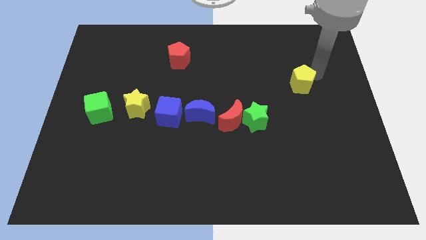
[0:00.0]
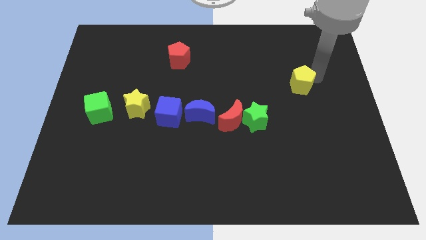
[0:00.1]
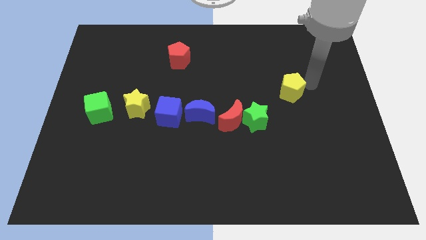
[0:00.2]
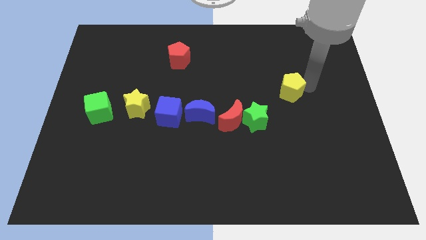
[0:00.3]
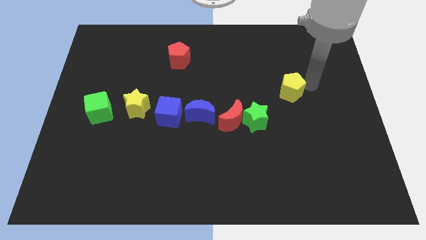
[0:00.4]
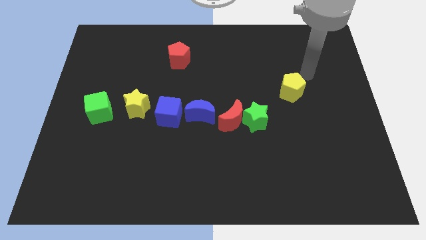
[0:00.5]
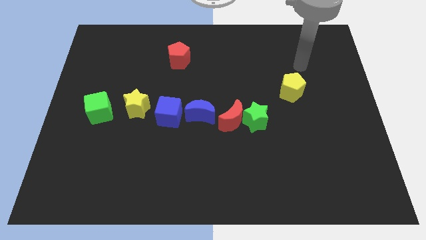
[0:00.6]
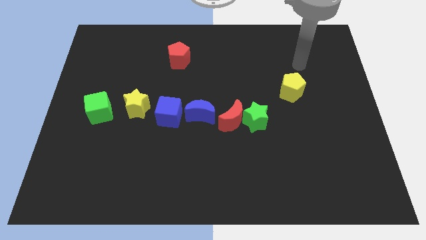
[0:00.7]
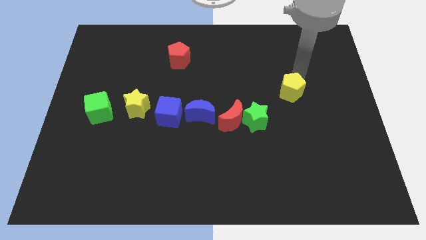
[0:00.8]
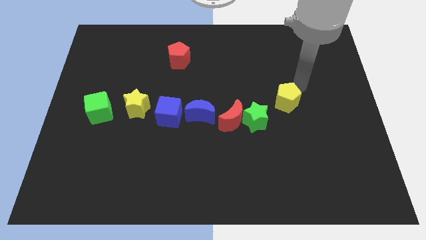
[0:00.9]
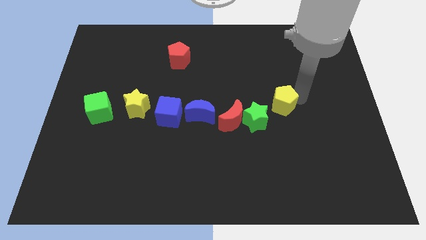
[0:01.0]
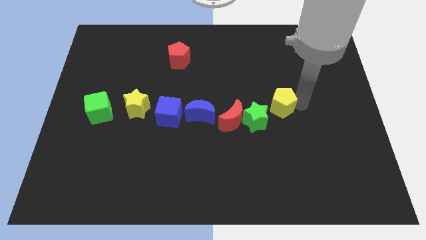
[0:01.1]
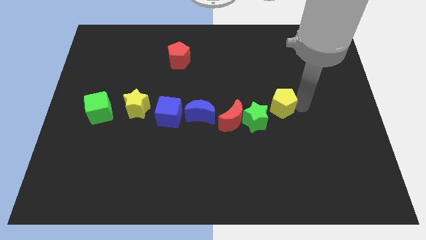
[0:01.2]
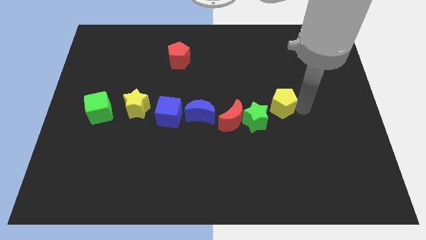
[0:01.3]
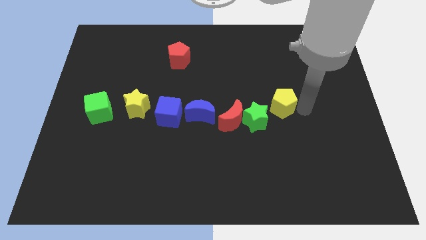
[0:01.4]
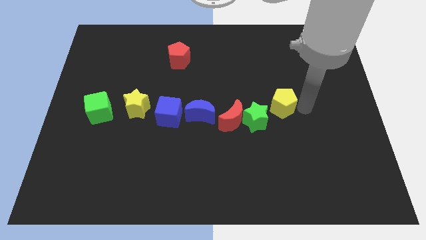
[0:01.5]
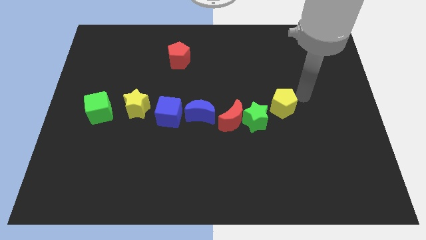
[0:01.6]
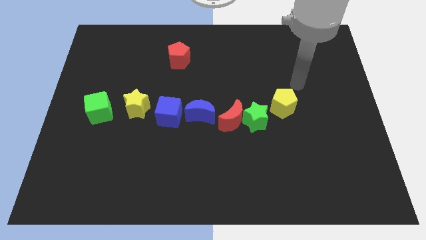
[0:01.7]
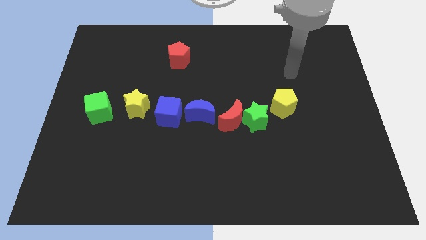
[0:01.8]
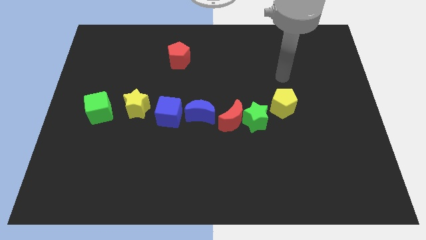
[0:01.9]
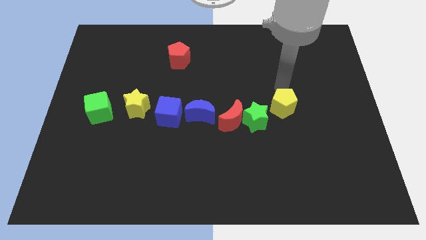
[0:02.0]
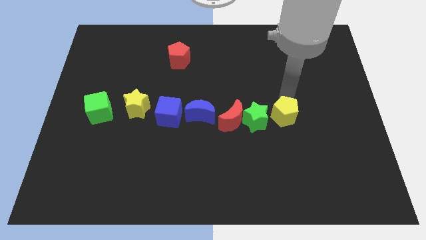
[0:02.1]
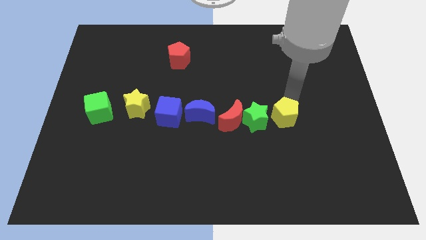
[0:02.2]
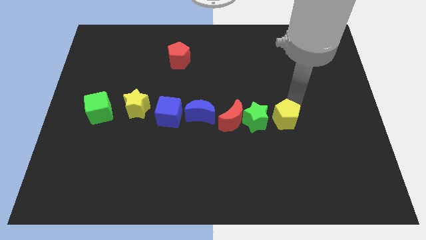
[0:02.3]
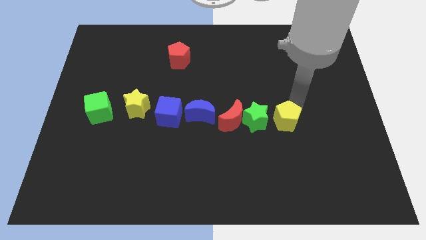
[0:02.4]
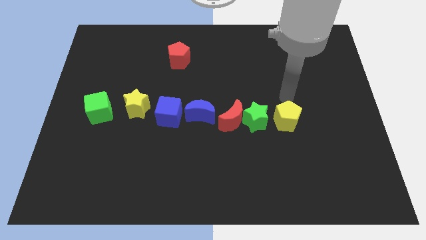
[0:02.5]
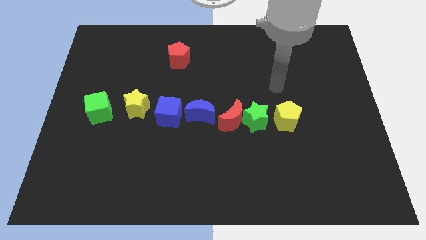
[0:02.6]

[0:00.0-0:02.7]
place yellow pentagon to the right green star

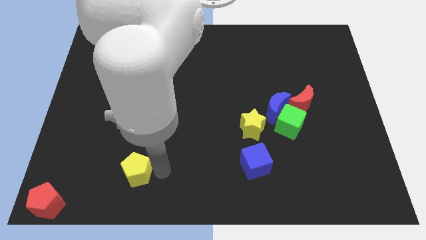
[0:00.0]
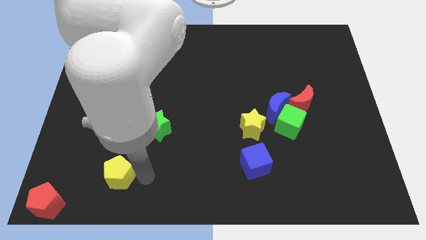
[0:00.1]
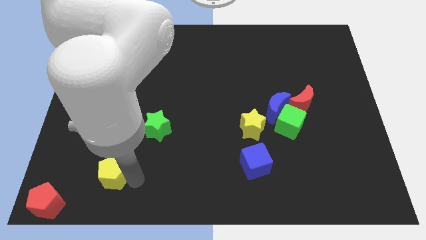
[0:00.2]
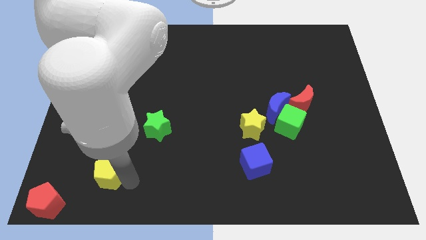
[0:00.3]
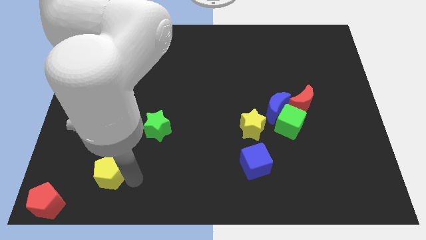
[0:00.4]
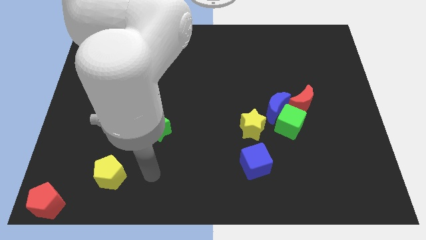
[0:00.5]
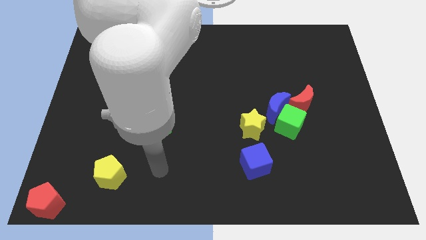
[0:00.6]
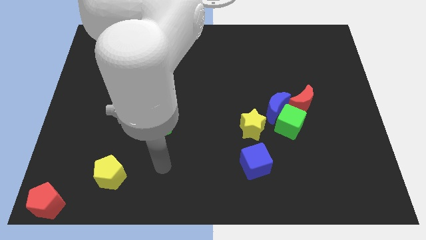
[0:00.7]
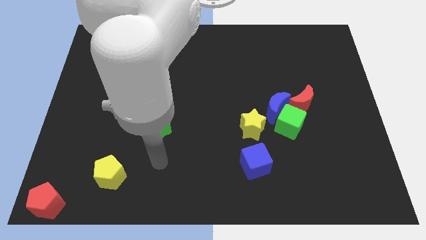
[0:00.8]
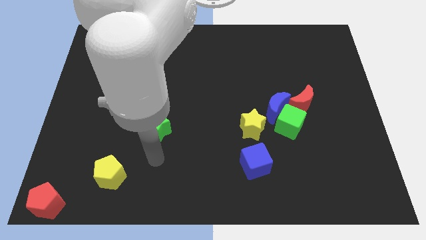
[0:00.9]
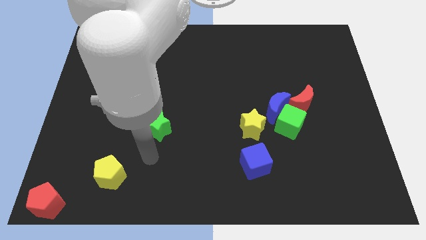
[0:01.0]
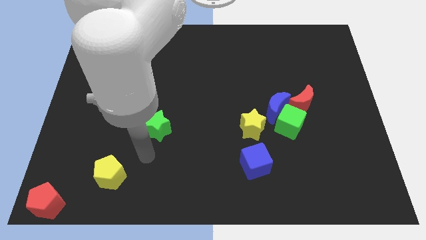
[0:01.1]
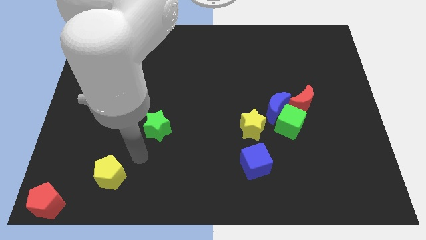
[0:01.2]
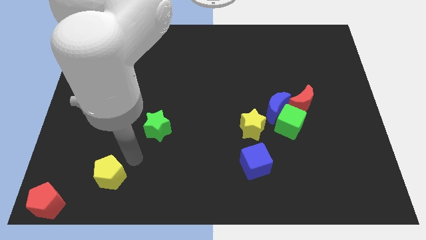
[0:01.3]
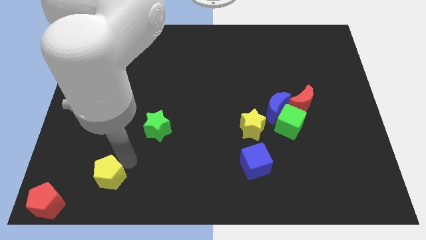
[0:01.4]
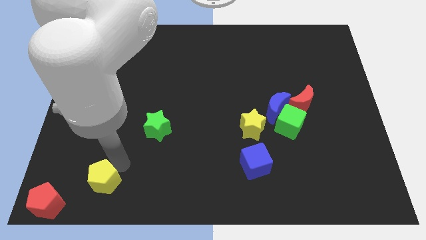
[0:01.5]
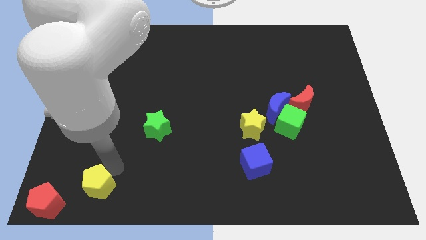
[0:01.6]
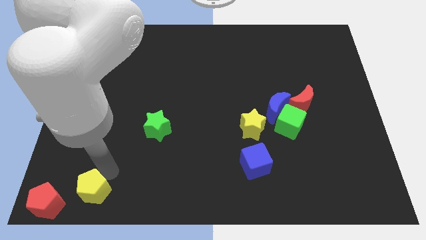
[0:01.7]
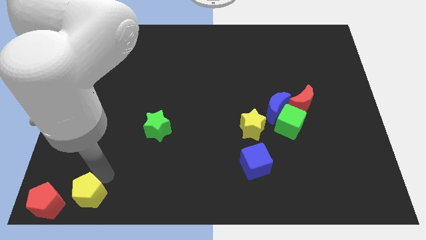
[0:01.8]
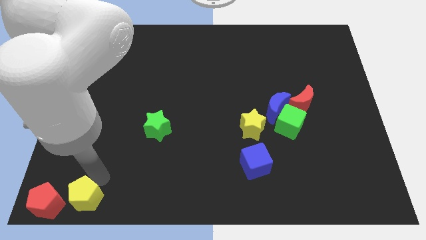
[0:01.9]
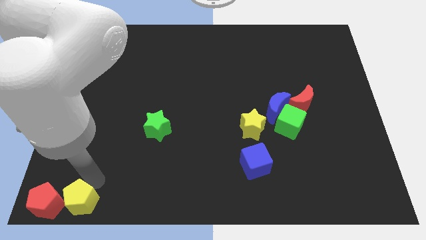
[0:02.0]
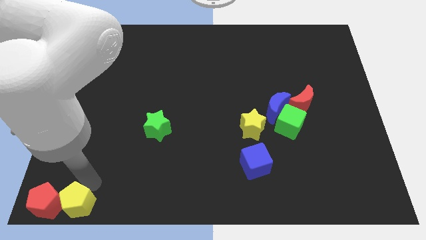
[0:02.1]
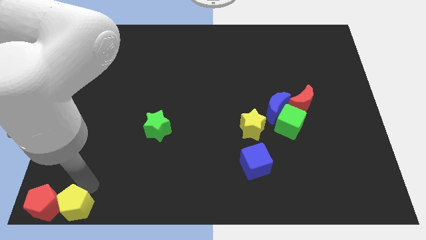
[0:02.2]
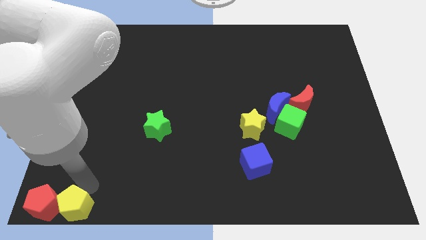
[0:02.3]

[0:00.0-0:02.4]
push yellow pentagan bottom left corner of the board towards red pentagan

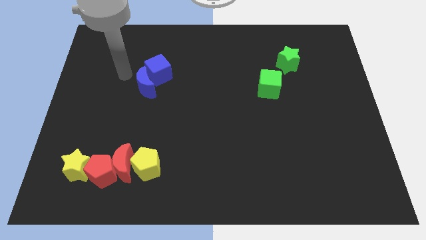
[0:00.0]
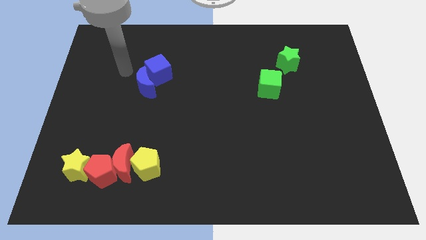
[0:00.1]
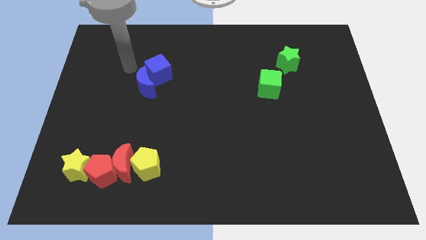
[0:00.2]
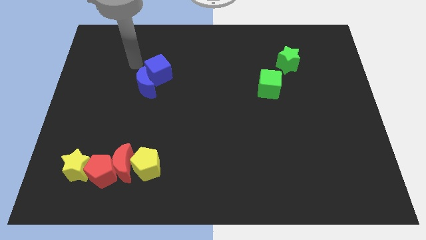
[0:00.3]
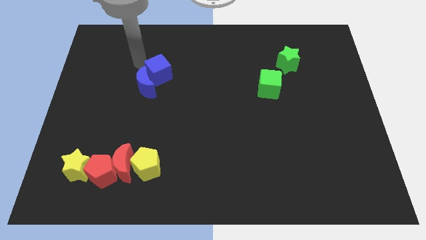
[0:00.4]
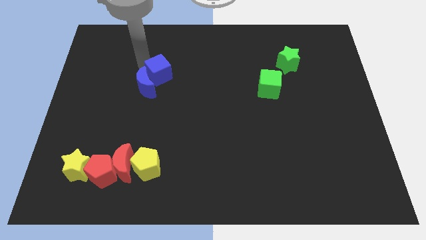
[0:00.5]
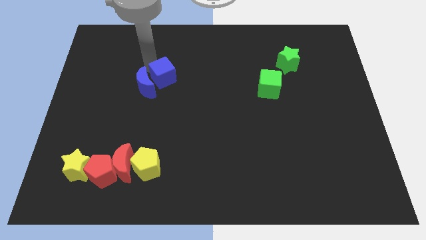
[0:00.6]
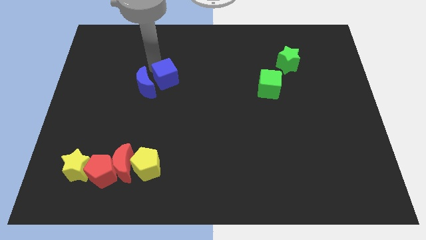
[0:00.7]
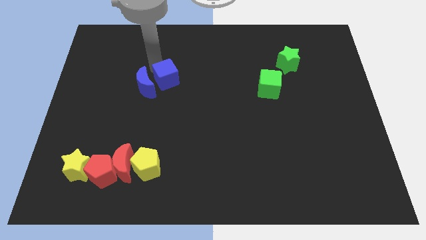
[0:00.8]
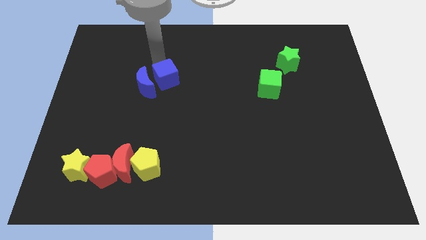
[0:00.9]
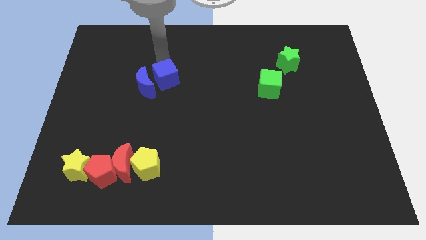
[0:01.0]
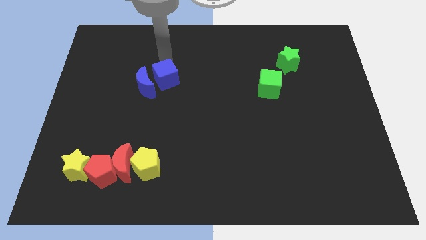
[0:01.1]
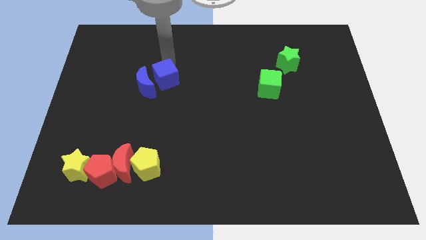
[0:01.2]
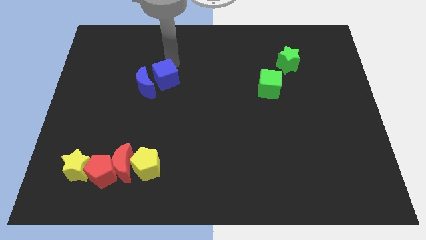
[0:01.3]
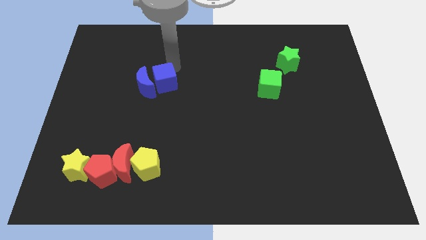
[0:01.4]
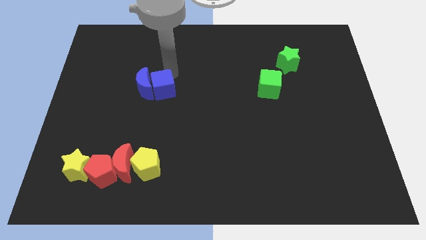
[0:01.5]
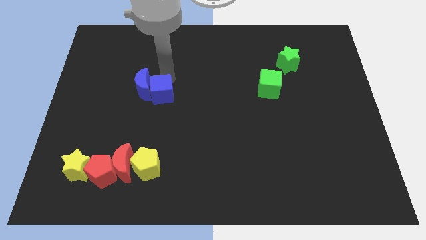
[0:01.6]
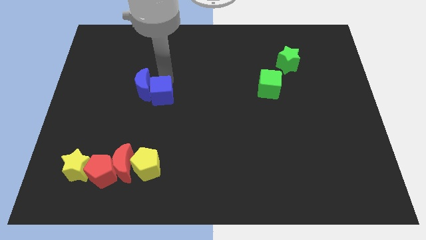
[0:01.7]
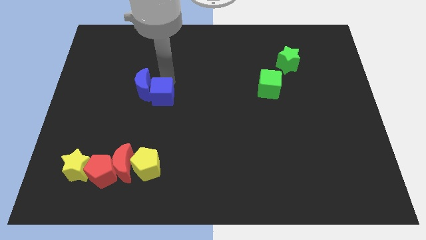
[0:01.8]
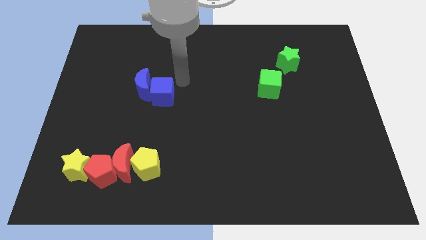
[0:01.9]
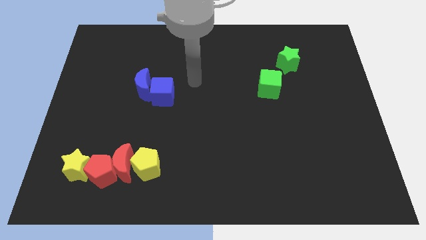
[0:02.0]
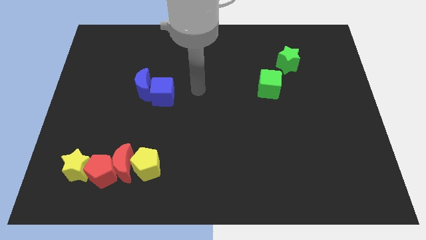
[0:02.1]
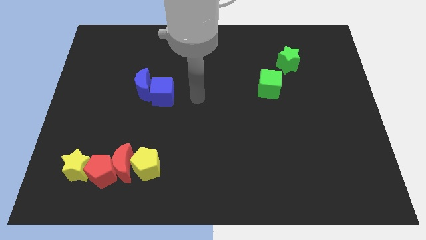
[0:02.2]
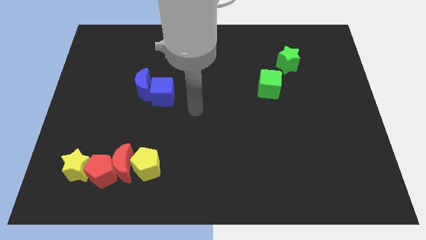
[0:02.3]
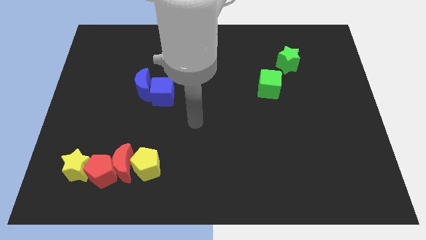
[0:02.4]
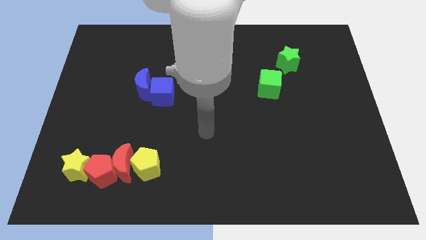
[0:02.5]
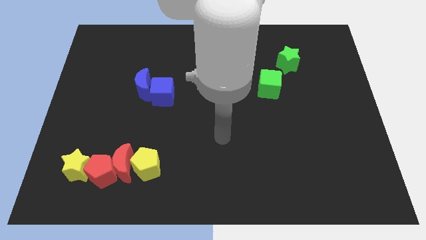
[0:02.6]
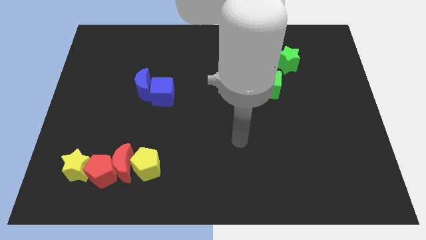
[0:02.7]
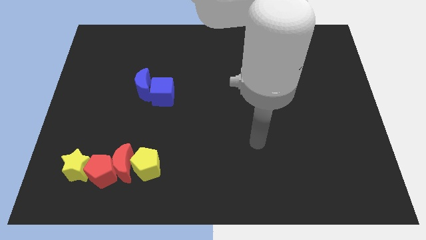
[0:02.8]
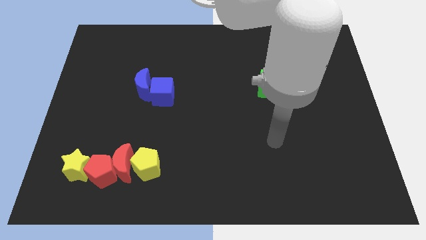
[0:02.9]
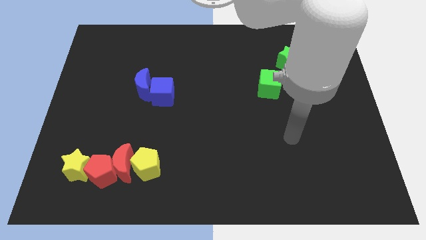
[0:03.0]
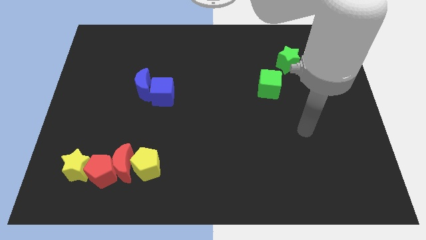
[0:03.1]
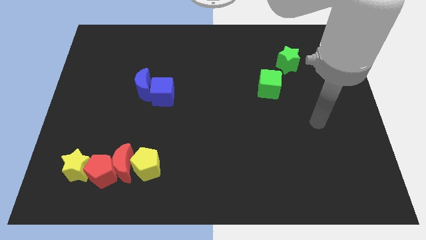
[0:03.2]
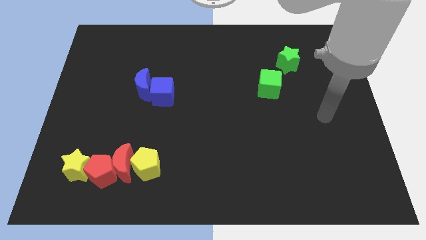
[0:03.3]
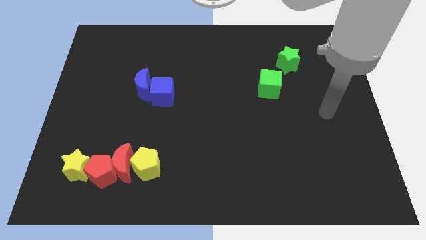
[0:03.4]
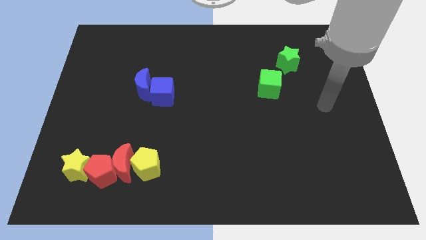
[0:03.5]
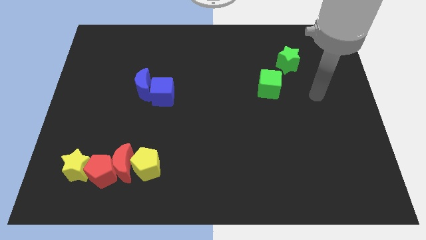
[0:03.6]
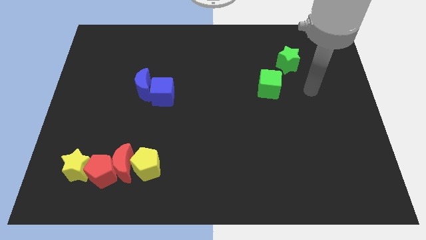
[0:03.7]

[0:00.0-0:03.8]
move the blue cube to the top of yellow pentagon
